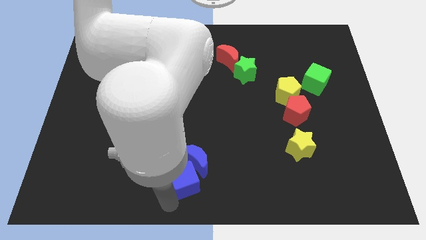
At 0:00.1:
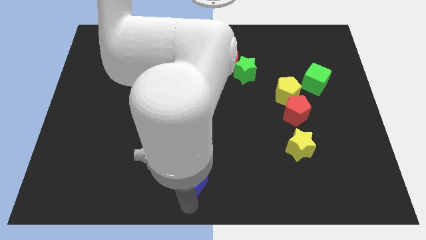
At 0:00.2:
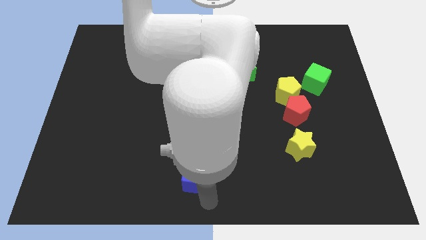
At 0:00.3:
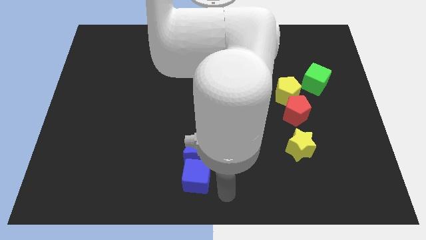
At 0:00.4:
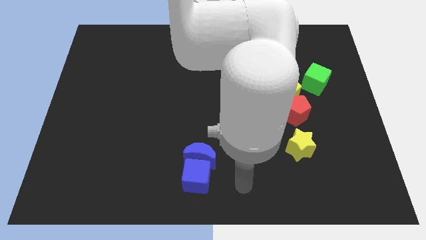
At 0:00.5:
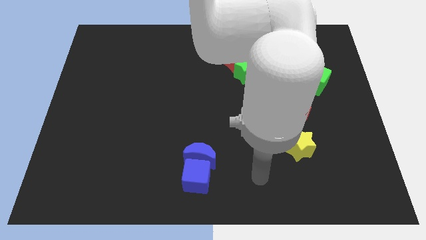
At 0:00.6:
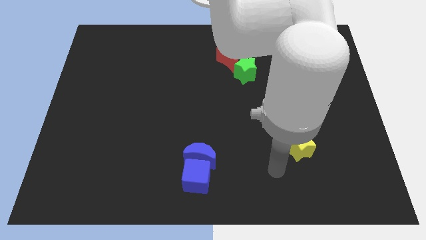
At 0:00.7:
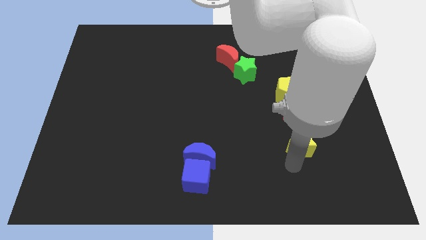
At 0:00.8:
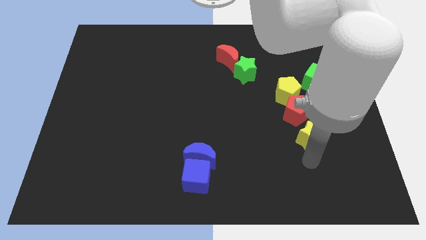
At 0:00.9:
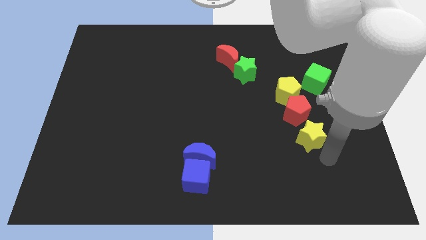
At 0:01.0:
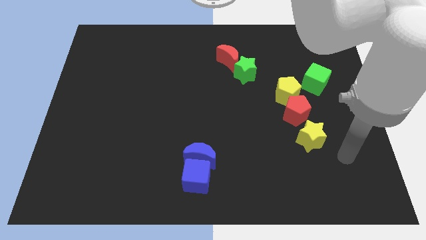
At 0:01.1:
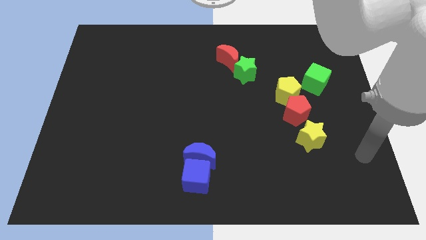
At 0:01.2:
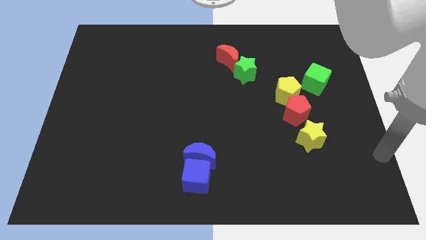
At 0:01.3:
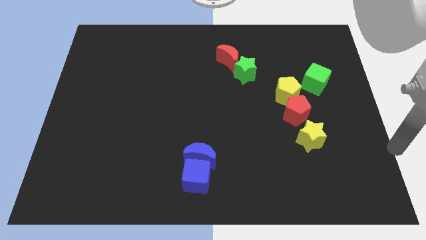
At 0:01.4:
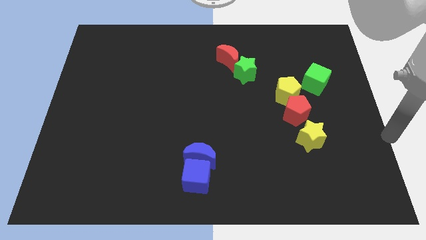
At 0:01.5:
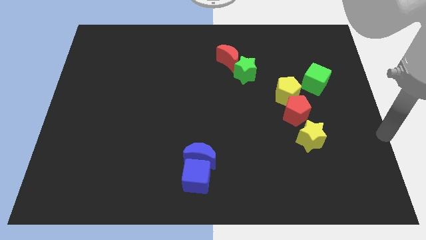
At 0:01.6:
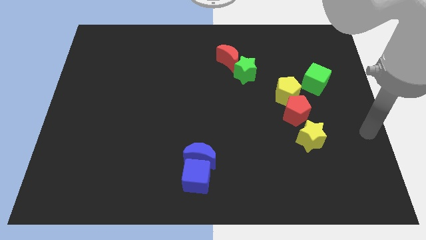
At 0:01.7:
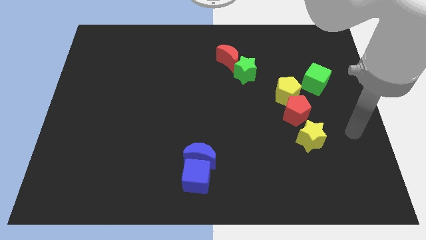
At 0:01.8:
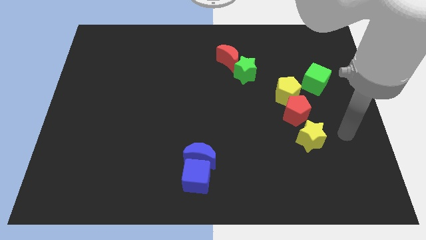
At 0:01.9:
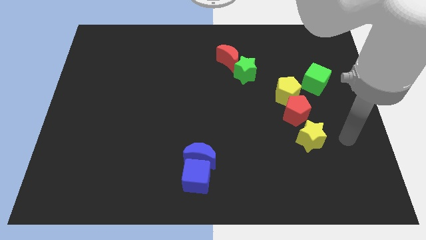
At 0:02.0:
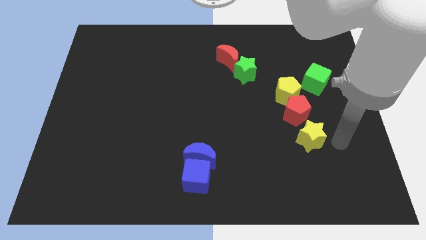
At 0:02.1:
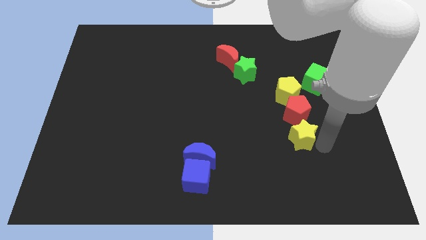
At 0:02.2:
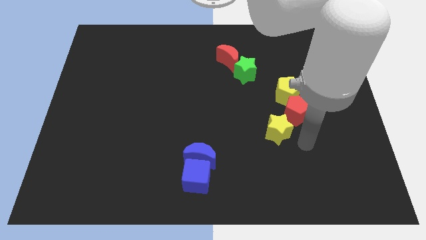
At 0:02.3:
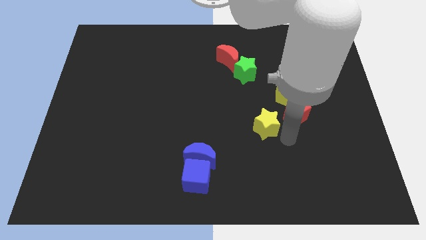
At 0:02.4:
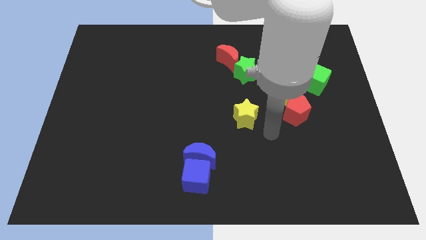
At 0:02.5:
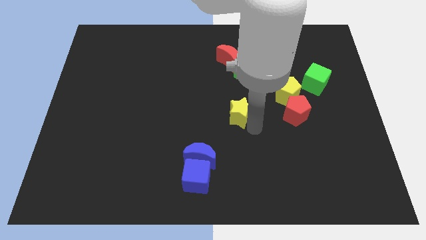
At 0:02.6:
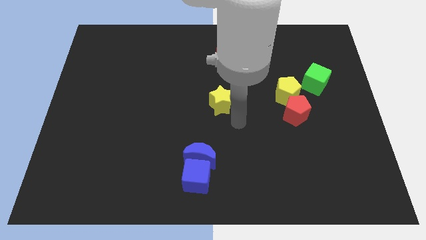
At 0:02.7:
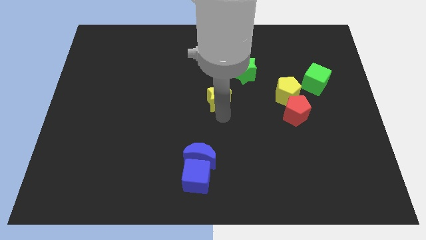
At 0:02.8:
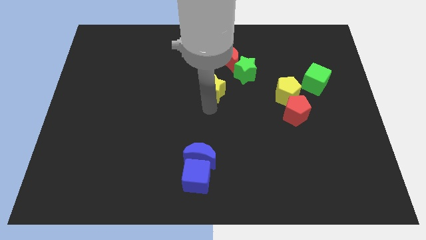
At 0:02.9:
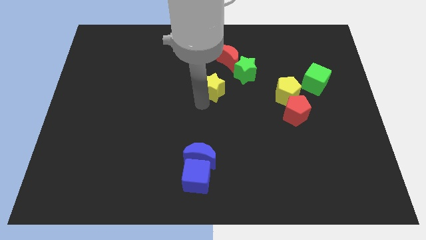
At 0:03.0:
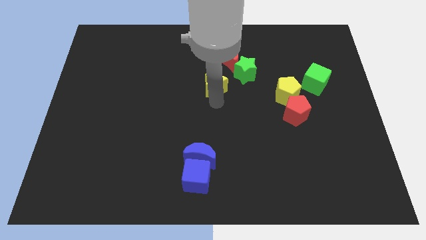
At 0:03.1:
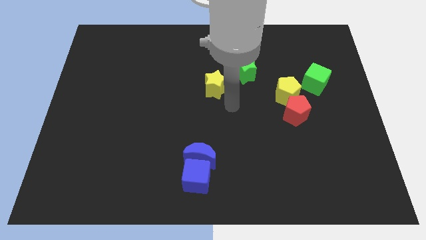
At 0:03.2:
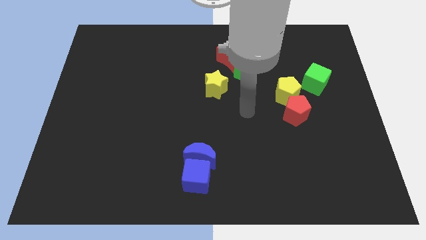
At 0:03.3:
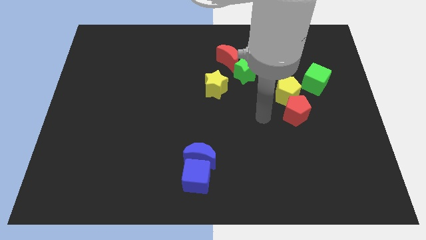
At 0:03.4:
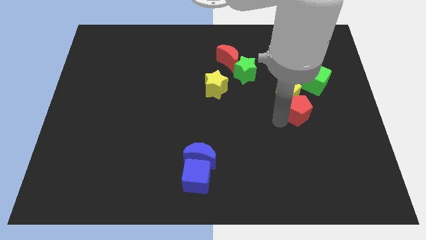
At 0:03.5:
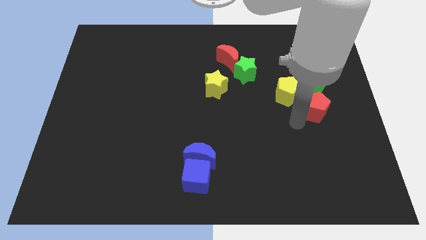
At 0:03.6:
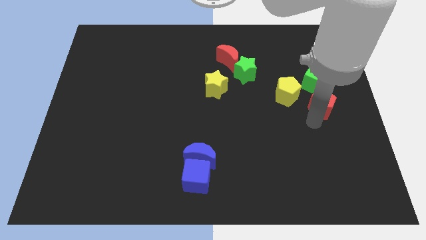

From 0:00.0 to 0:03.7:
move the yellow star towards the bottom left side of the green star

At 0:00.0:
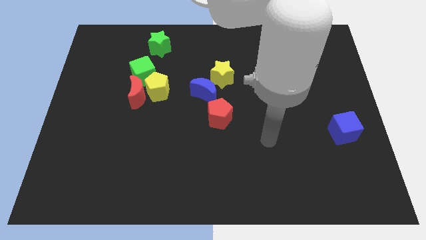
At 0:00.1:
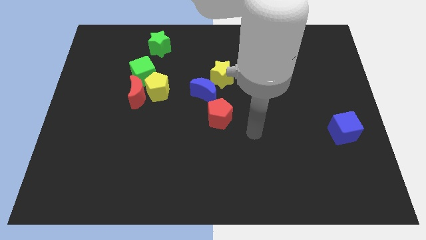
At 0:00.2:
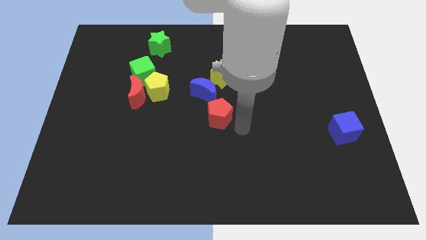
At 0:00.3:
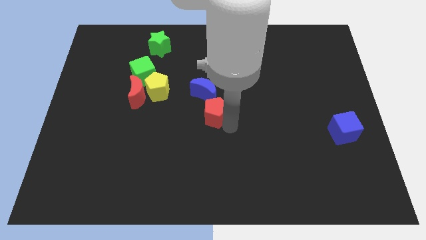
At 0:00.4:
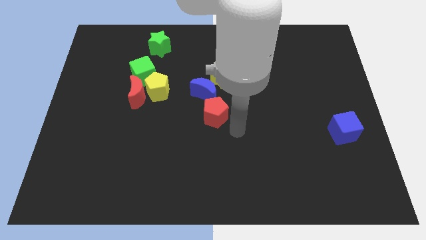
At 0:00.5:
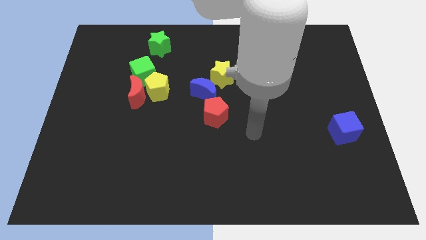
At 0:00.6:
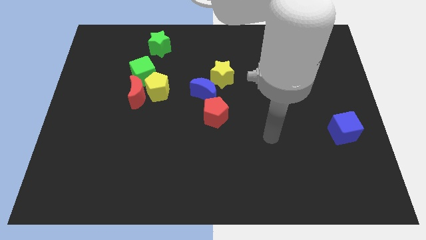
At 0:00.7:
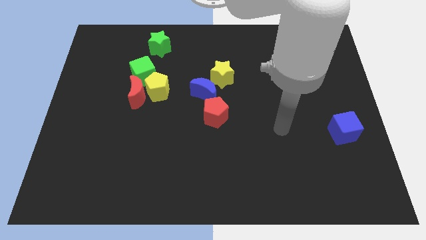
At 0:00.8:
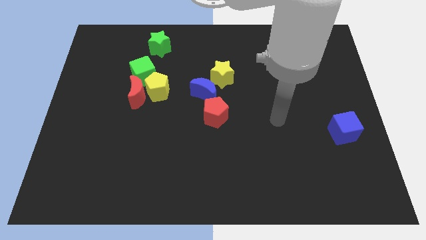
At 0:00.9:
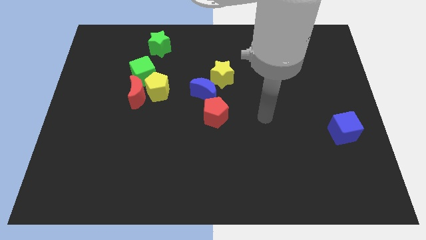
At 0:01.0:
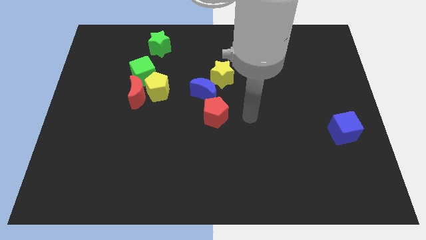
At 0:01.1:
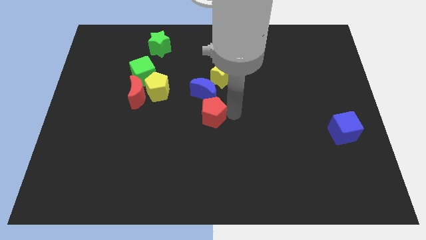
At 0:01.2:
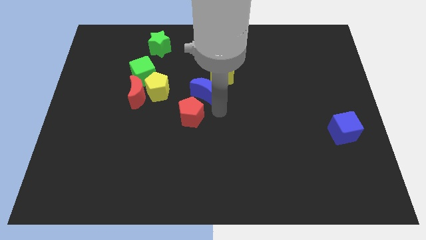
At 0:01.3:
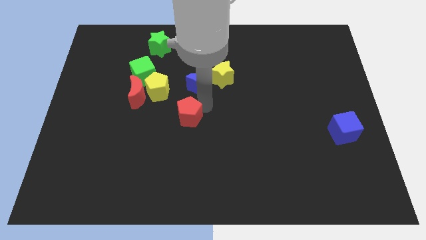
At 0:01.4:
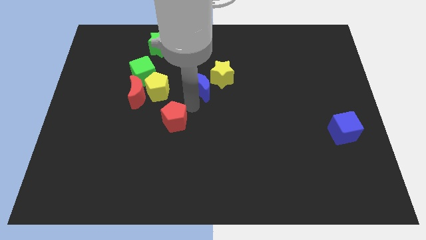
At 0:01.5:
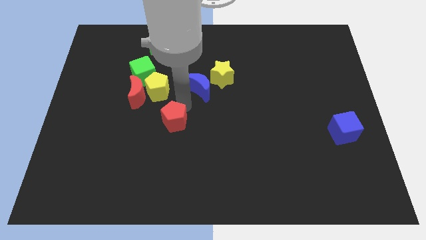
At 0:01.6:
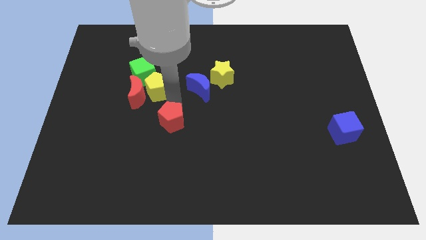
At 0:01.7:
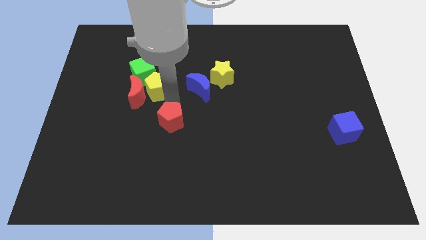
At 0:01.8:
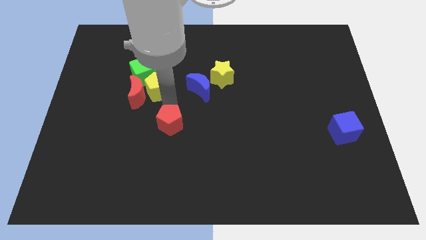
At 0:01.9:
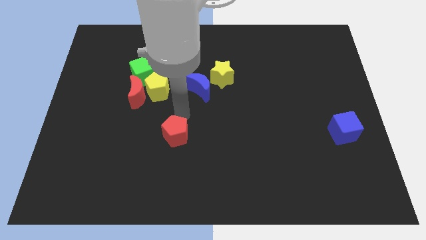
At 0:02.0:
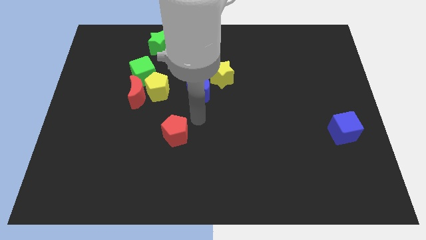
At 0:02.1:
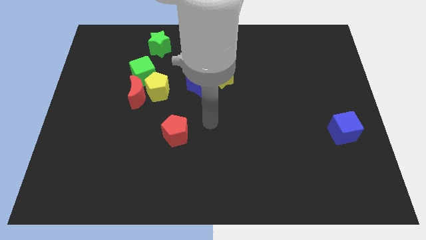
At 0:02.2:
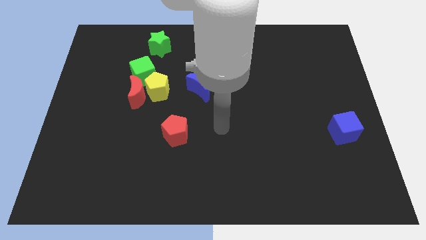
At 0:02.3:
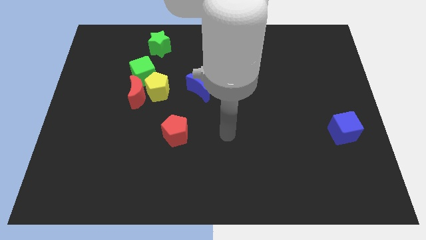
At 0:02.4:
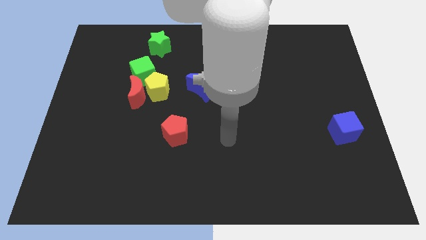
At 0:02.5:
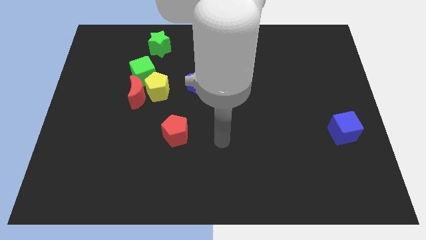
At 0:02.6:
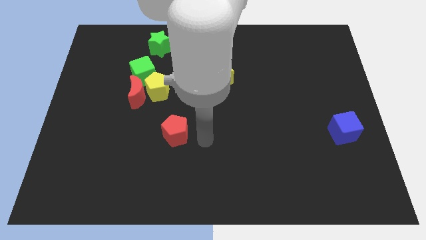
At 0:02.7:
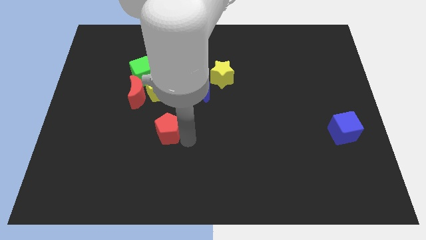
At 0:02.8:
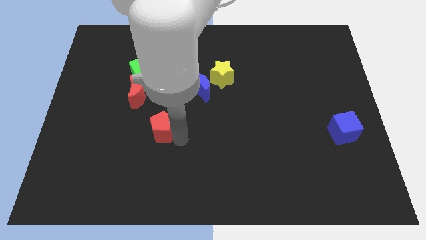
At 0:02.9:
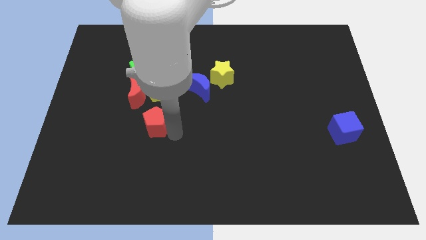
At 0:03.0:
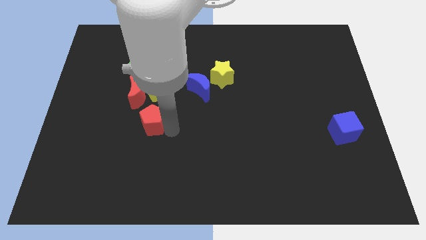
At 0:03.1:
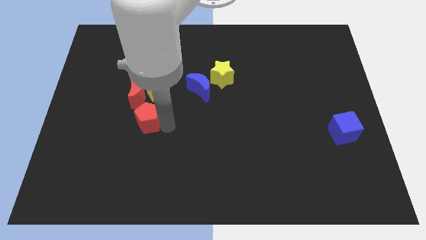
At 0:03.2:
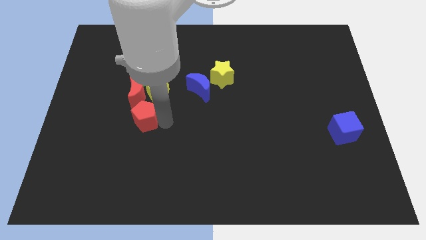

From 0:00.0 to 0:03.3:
place the red pentagon below the red moon

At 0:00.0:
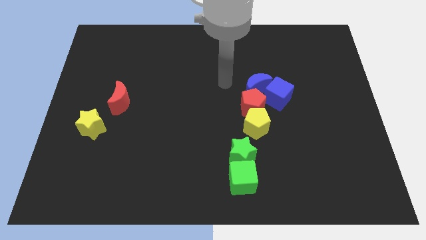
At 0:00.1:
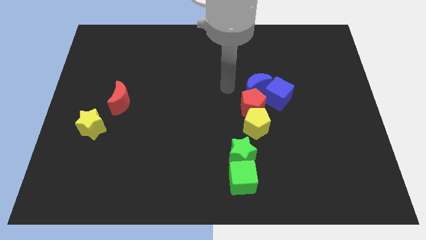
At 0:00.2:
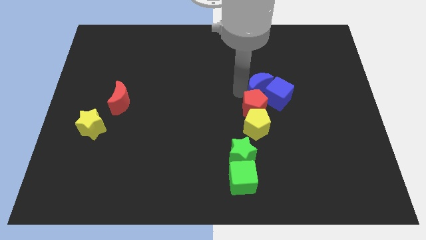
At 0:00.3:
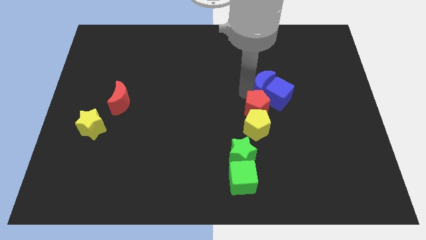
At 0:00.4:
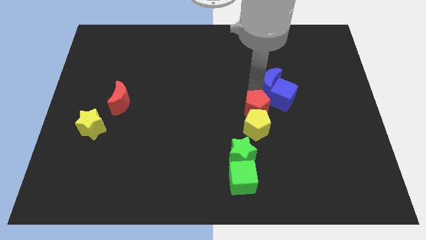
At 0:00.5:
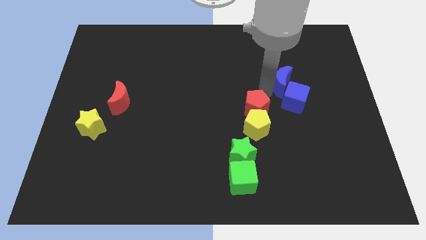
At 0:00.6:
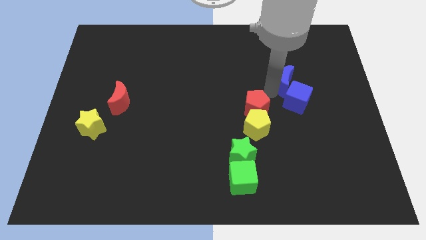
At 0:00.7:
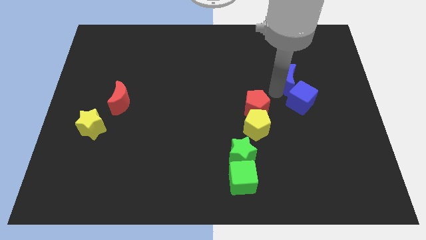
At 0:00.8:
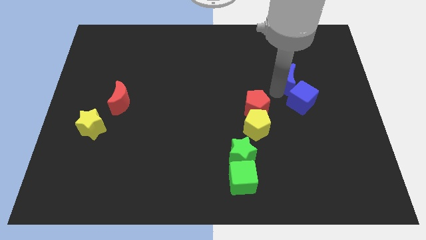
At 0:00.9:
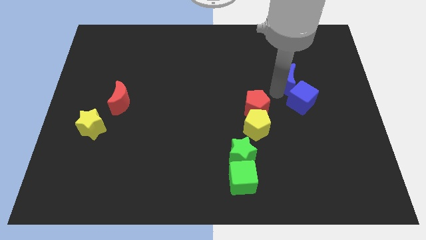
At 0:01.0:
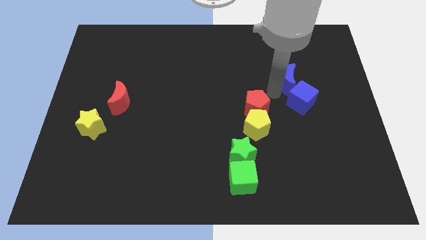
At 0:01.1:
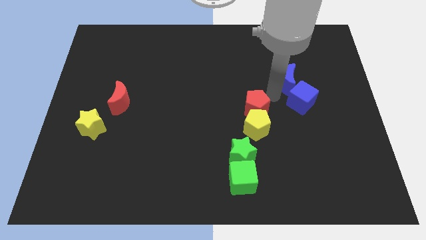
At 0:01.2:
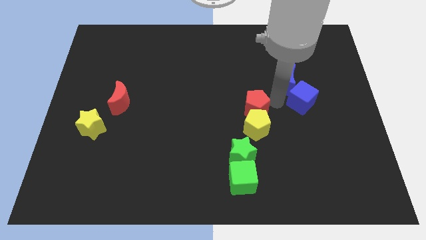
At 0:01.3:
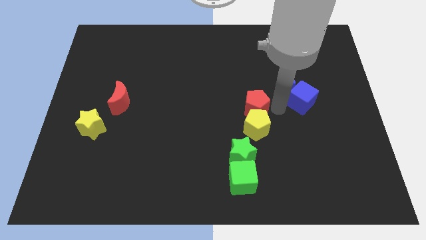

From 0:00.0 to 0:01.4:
push the group of blue blocks to the right

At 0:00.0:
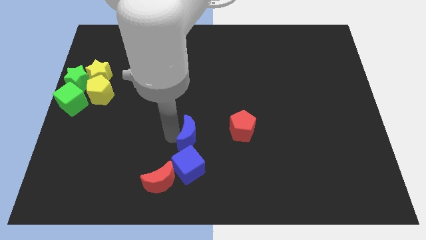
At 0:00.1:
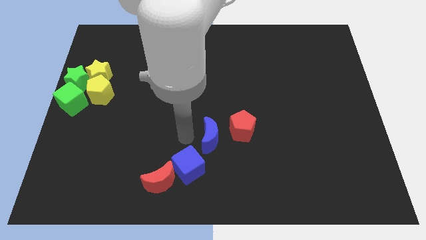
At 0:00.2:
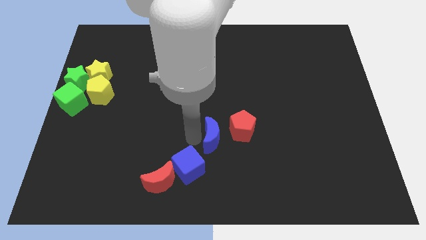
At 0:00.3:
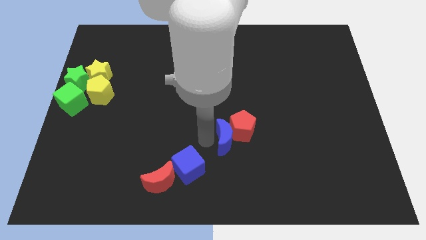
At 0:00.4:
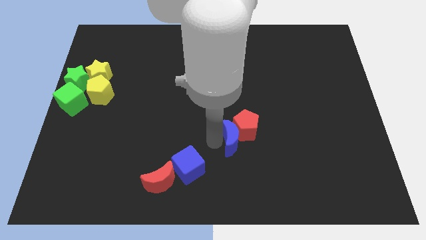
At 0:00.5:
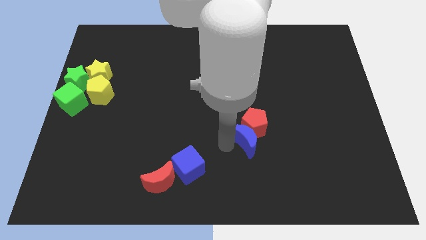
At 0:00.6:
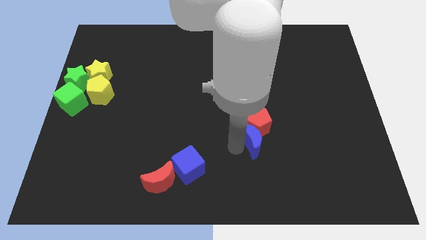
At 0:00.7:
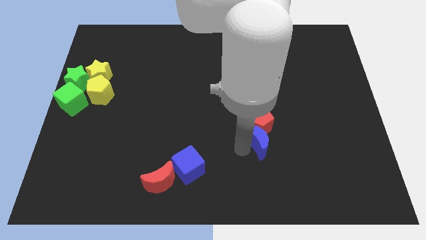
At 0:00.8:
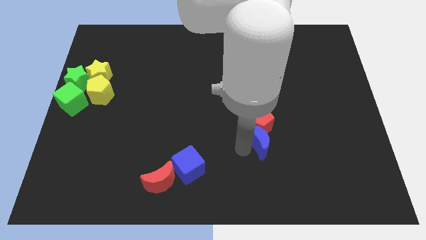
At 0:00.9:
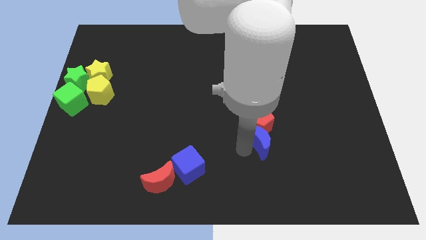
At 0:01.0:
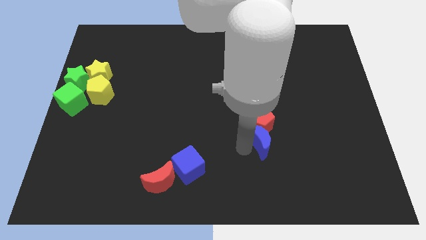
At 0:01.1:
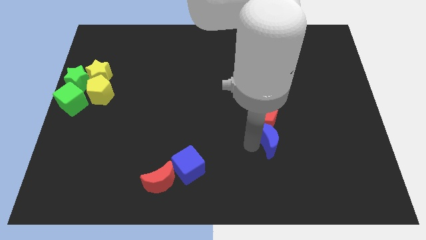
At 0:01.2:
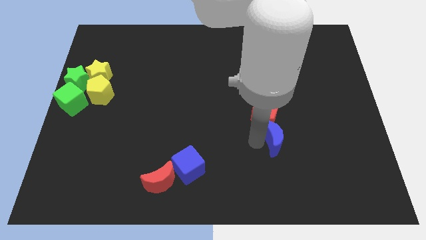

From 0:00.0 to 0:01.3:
slide the blue moon into the red pentagon
